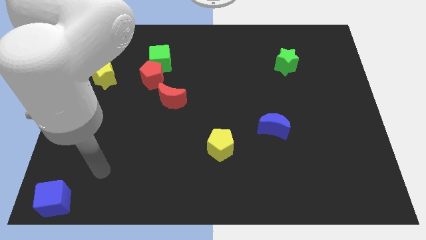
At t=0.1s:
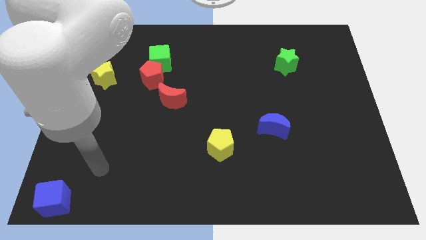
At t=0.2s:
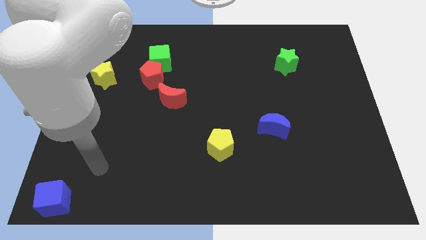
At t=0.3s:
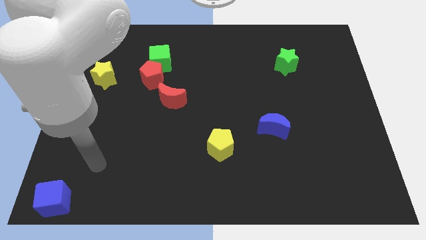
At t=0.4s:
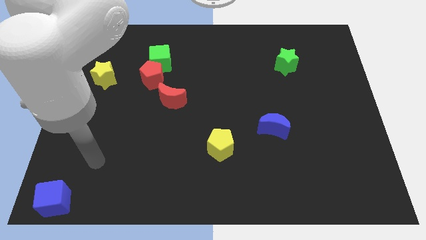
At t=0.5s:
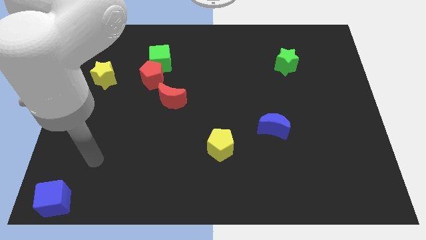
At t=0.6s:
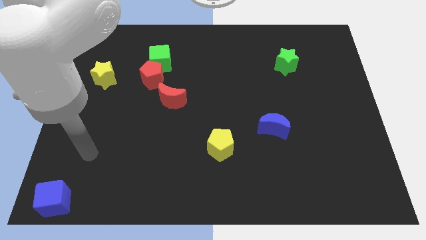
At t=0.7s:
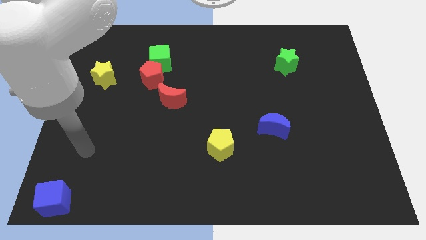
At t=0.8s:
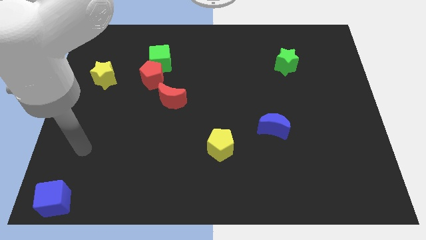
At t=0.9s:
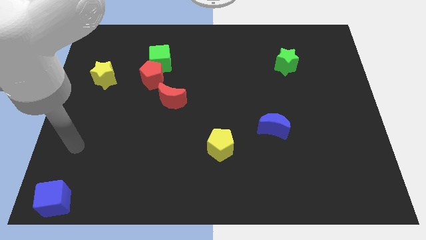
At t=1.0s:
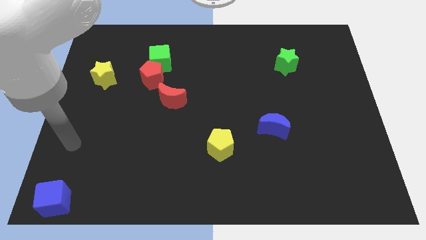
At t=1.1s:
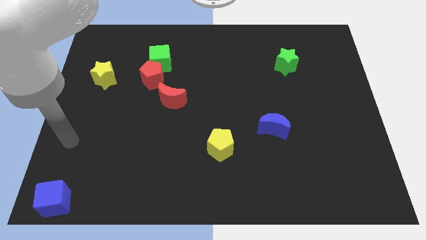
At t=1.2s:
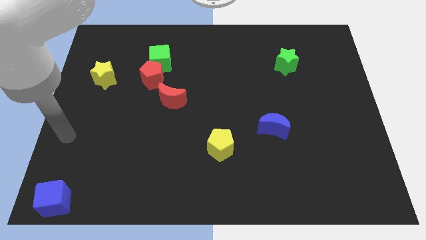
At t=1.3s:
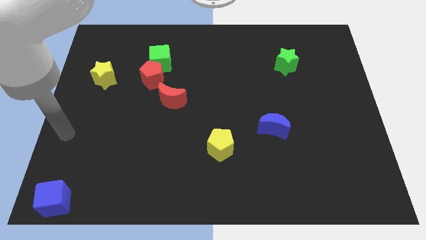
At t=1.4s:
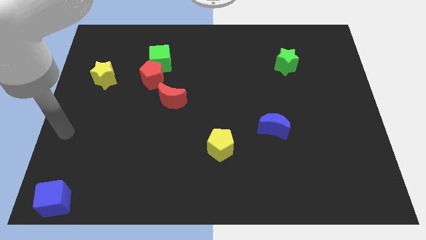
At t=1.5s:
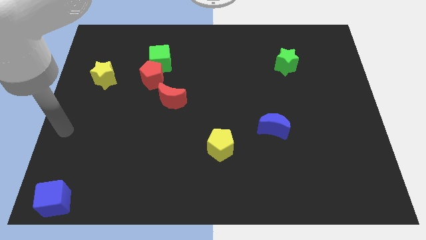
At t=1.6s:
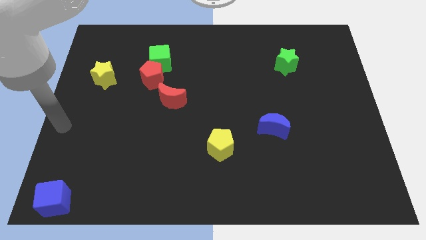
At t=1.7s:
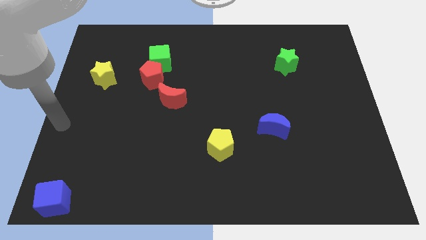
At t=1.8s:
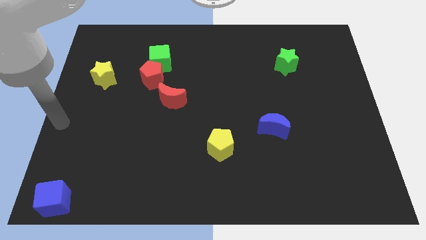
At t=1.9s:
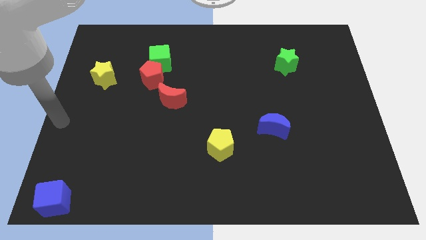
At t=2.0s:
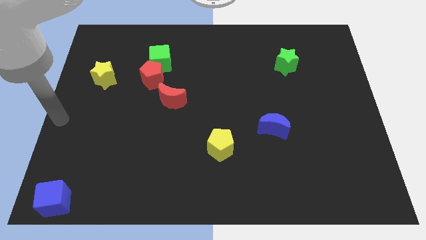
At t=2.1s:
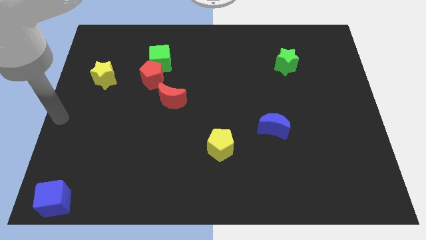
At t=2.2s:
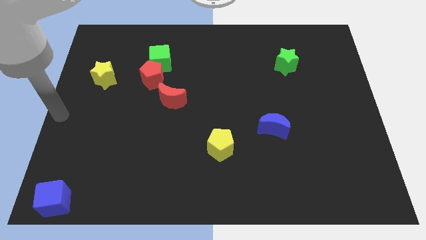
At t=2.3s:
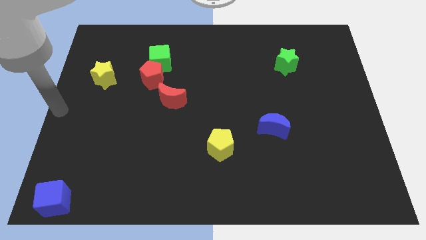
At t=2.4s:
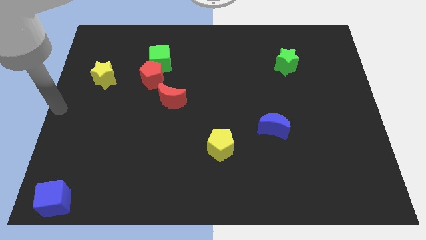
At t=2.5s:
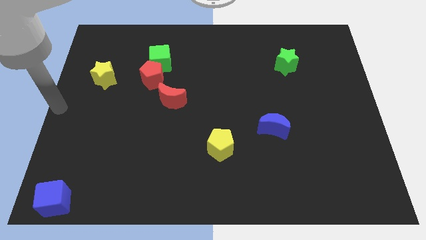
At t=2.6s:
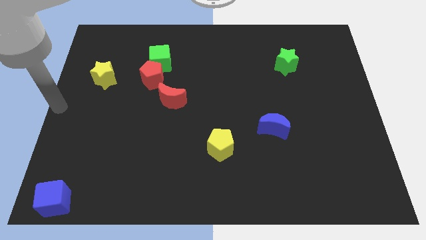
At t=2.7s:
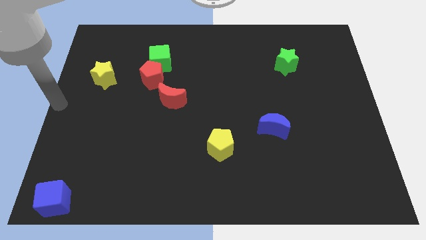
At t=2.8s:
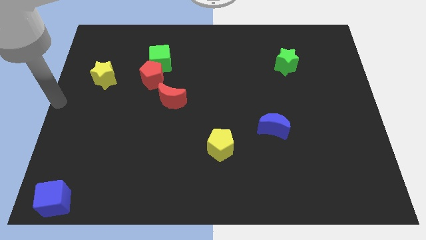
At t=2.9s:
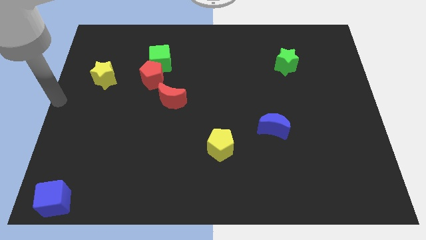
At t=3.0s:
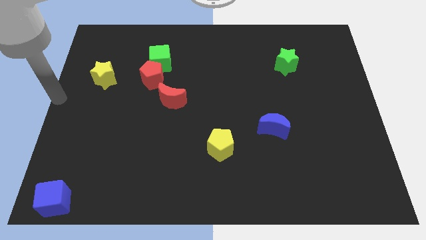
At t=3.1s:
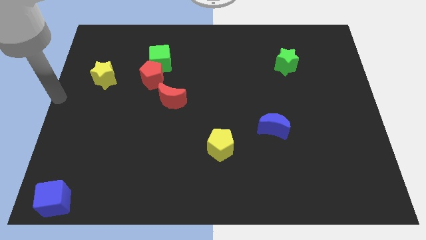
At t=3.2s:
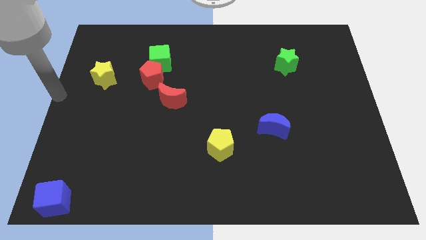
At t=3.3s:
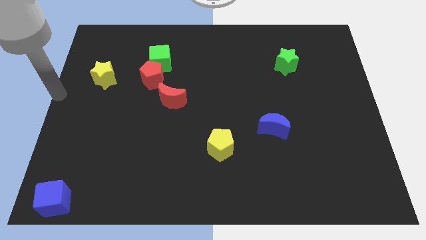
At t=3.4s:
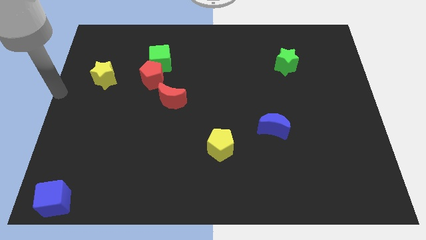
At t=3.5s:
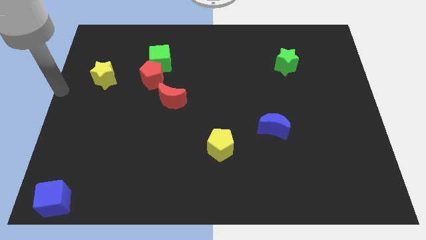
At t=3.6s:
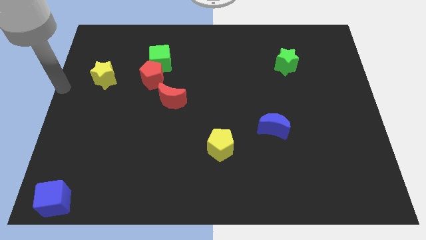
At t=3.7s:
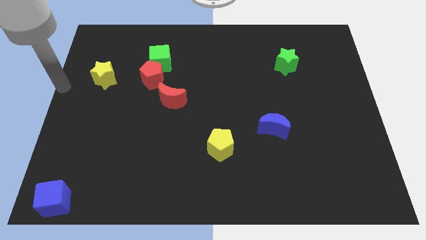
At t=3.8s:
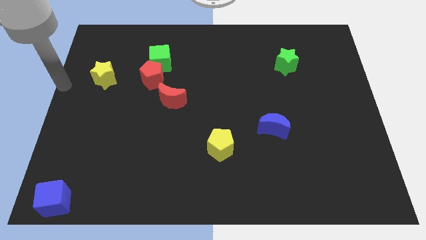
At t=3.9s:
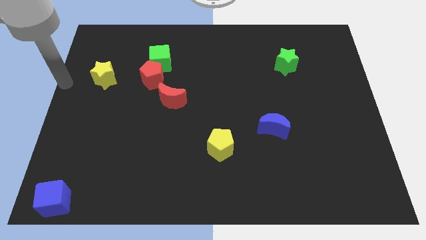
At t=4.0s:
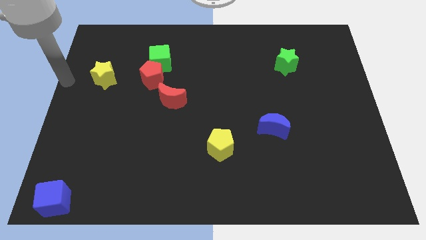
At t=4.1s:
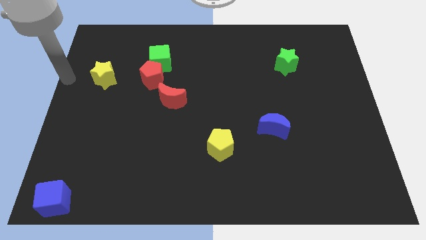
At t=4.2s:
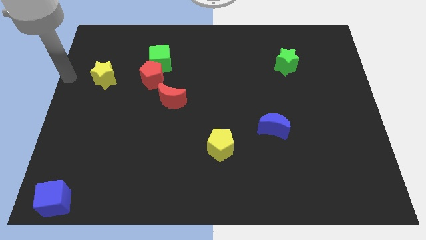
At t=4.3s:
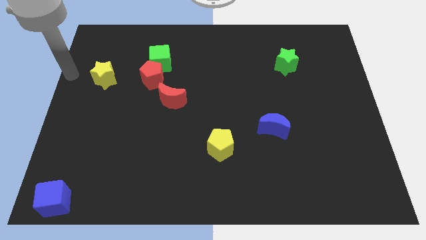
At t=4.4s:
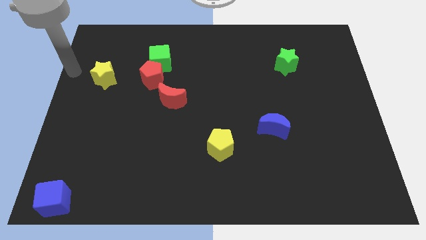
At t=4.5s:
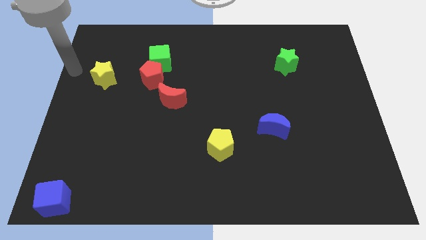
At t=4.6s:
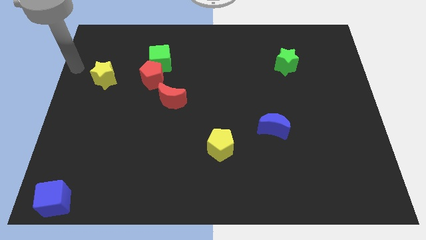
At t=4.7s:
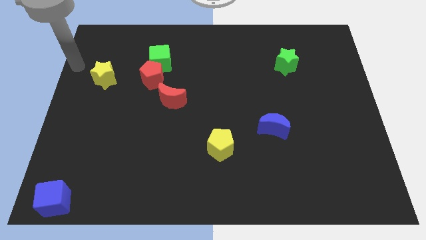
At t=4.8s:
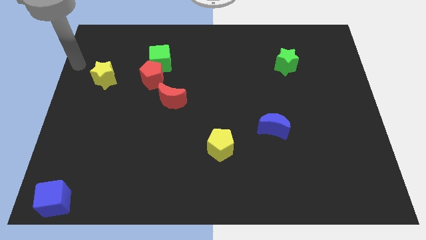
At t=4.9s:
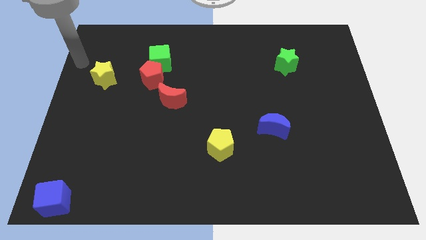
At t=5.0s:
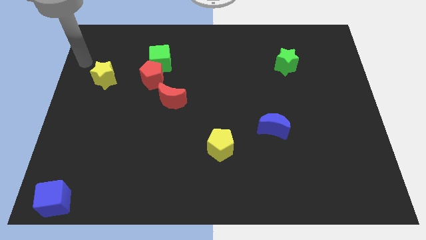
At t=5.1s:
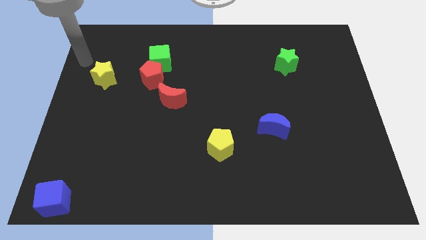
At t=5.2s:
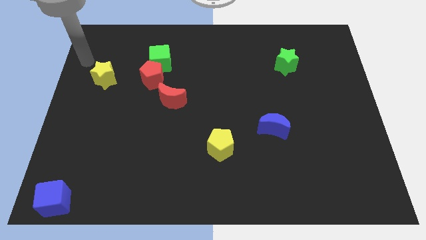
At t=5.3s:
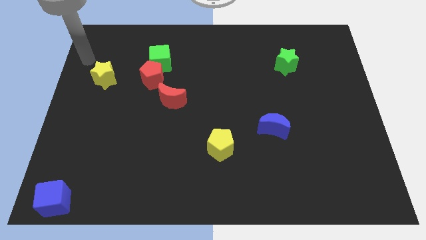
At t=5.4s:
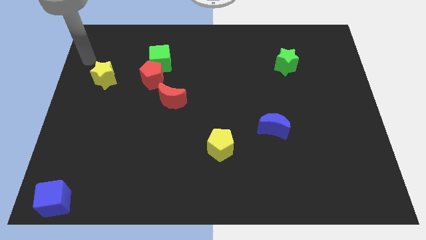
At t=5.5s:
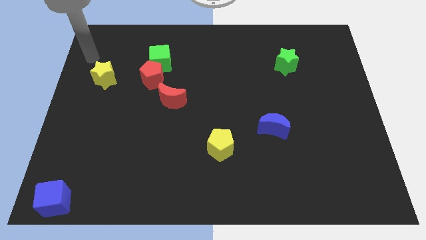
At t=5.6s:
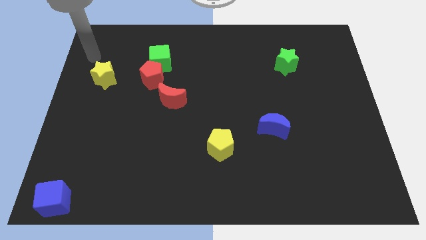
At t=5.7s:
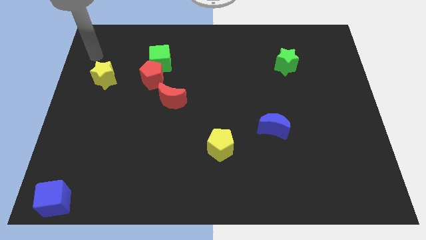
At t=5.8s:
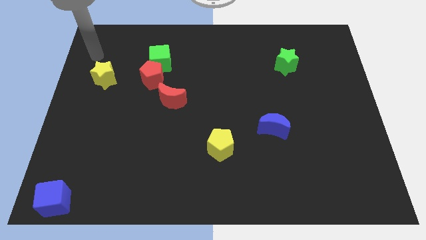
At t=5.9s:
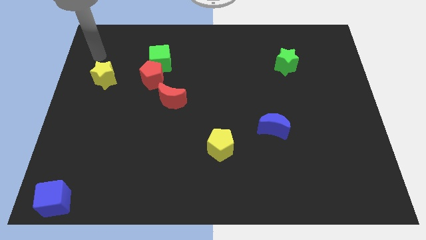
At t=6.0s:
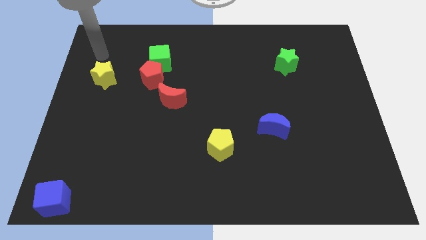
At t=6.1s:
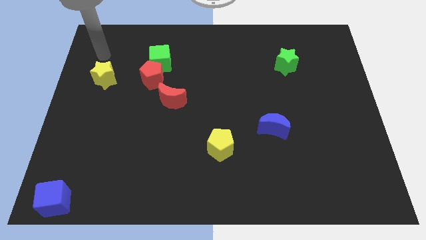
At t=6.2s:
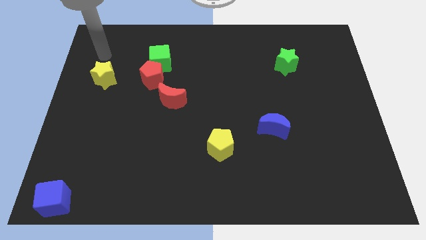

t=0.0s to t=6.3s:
point your hand above the yellow star

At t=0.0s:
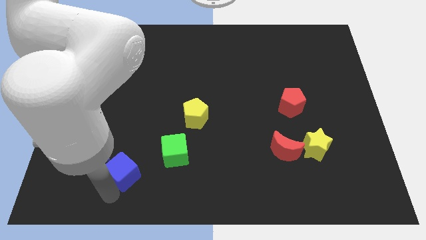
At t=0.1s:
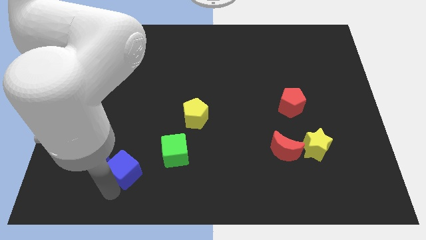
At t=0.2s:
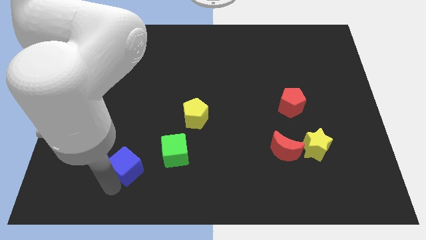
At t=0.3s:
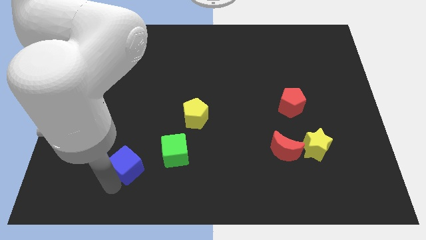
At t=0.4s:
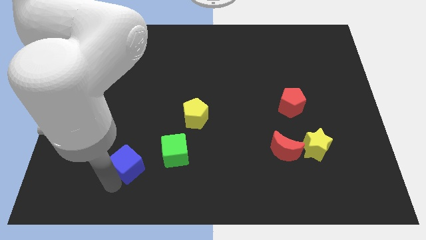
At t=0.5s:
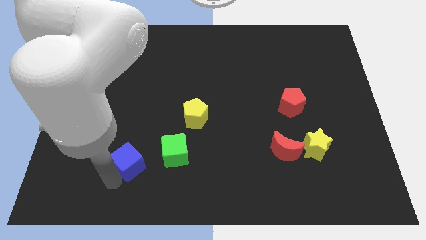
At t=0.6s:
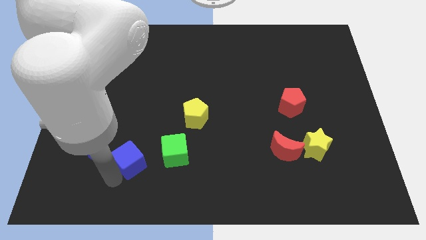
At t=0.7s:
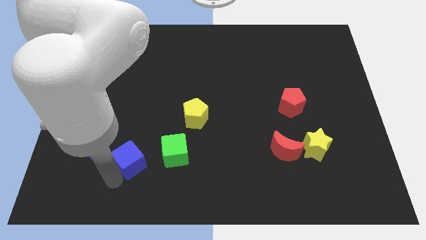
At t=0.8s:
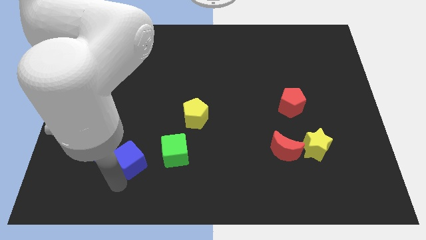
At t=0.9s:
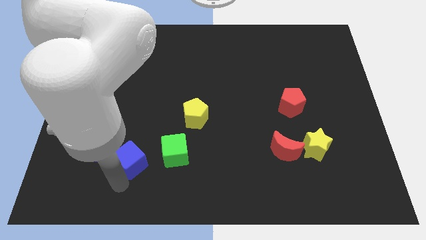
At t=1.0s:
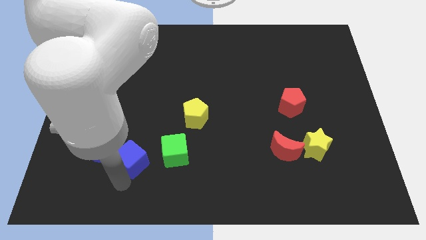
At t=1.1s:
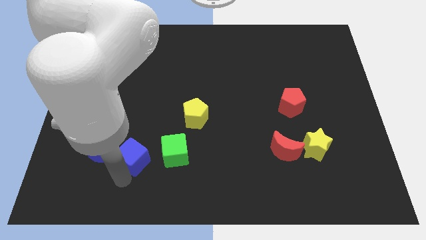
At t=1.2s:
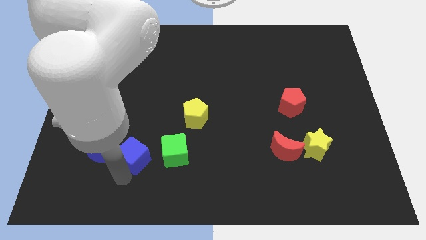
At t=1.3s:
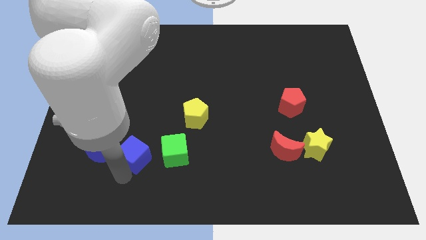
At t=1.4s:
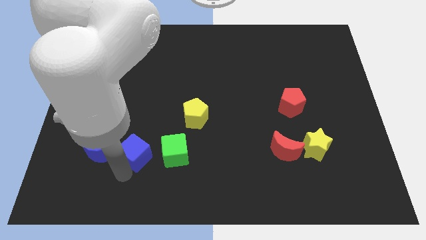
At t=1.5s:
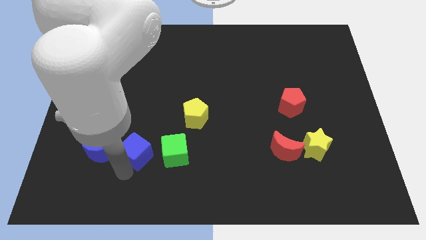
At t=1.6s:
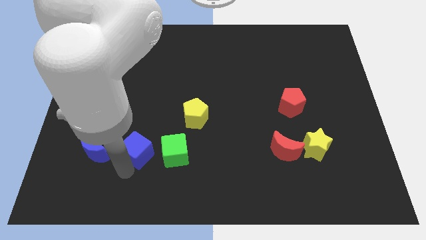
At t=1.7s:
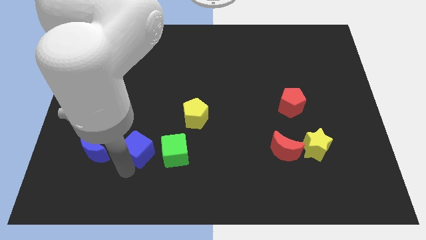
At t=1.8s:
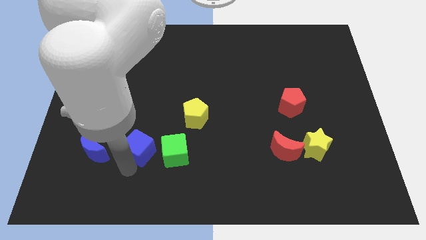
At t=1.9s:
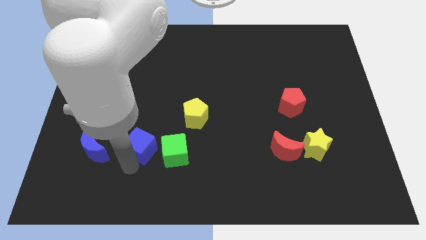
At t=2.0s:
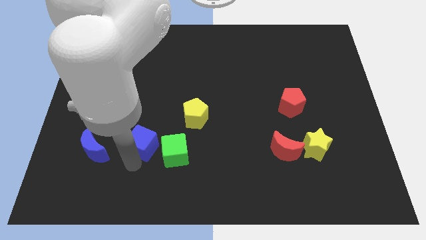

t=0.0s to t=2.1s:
move the blue cube slightly up

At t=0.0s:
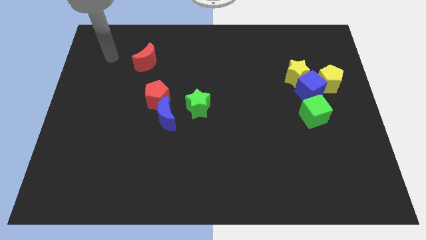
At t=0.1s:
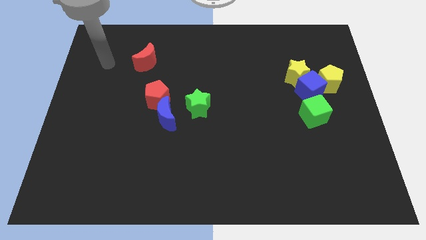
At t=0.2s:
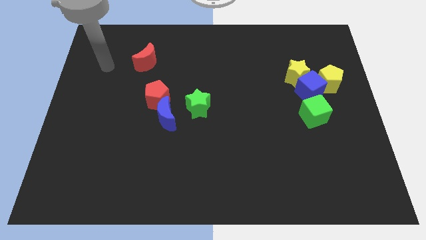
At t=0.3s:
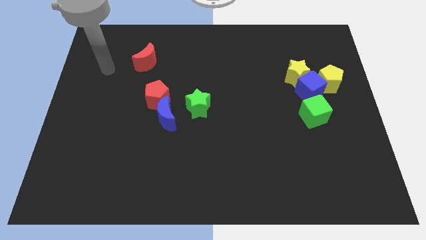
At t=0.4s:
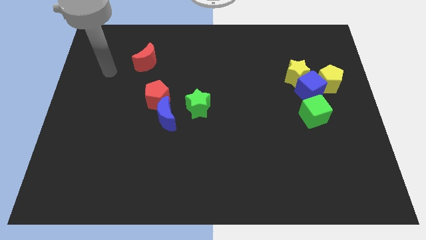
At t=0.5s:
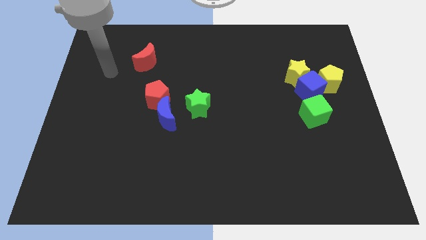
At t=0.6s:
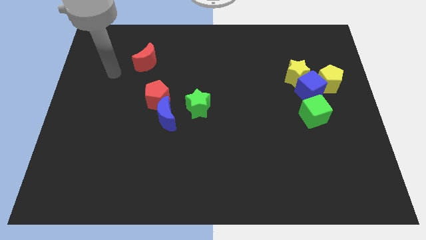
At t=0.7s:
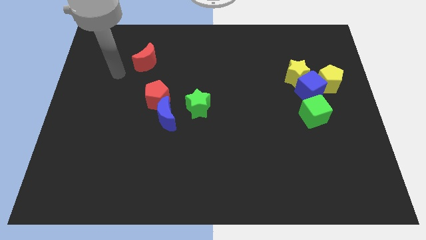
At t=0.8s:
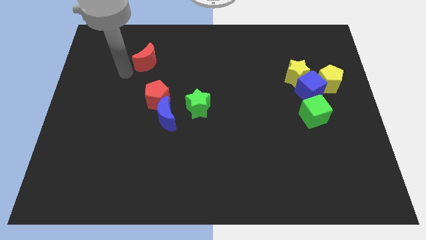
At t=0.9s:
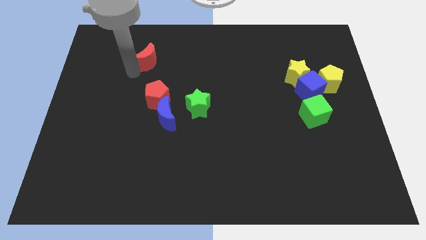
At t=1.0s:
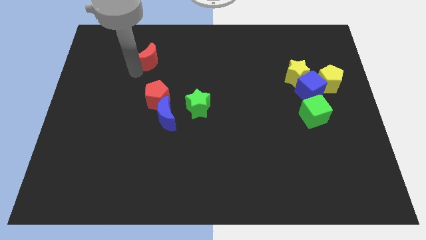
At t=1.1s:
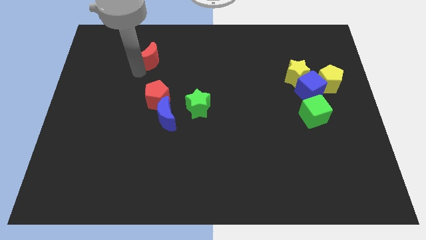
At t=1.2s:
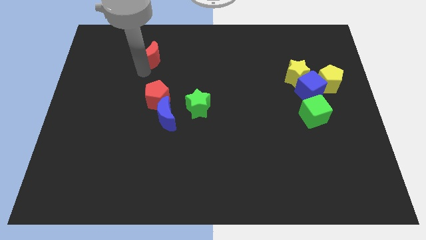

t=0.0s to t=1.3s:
move the red moon slightly to the right
